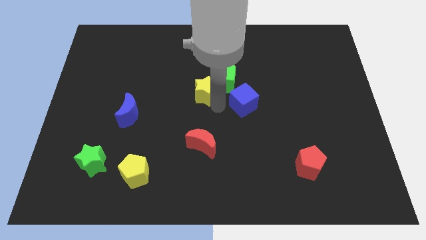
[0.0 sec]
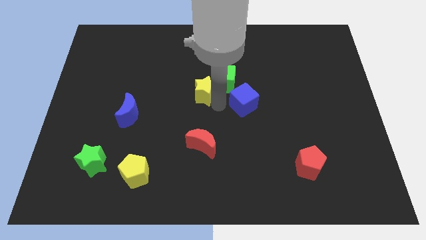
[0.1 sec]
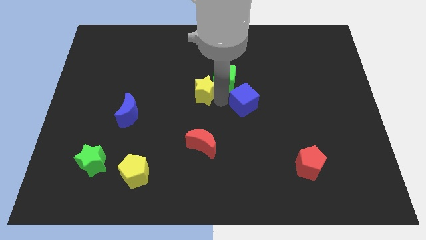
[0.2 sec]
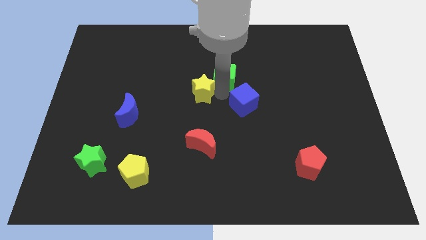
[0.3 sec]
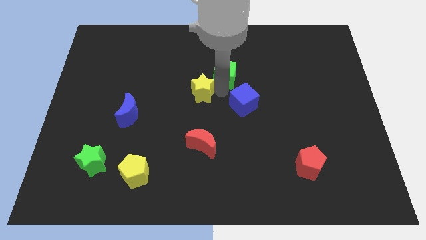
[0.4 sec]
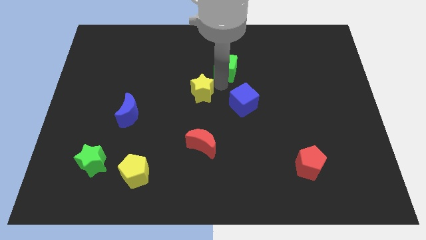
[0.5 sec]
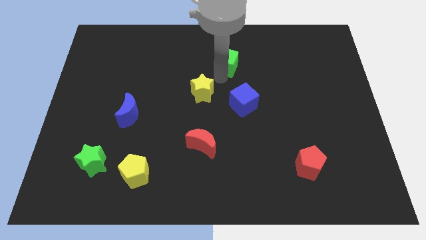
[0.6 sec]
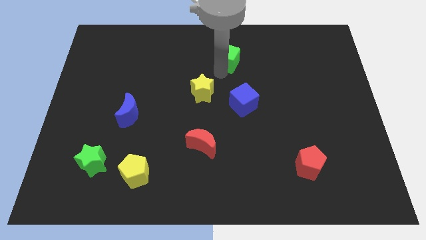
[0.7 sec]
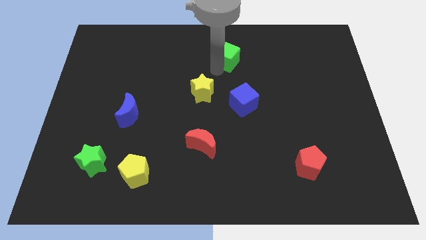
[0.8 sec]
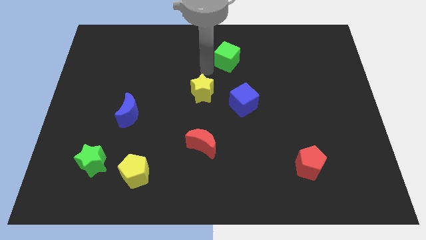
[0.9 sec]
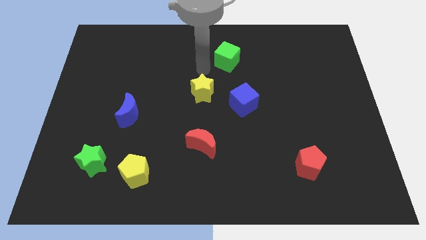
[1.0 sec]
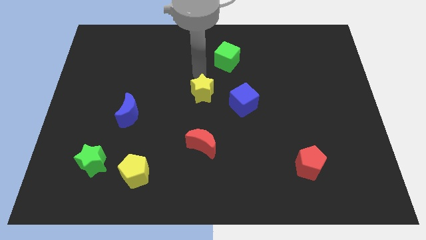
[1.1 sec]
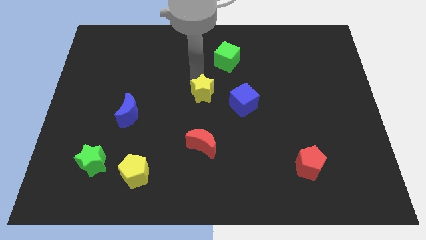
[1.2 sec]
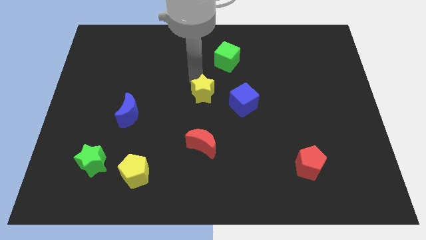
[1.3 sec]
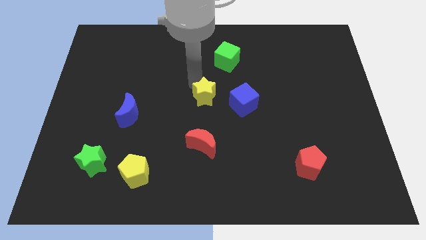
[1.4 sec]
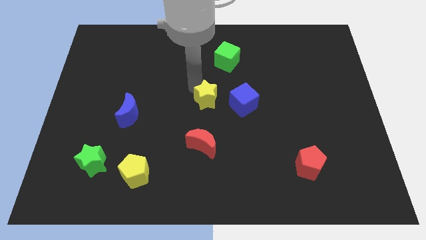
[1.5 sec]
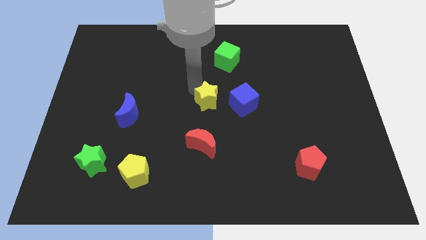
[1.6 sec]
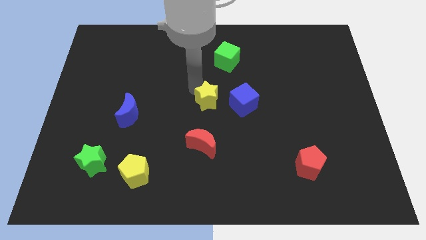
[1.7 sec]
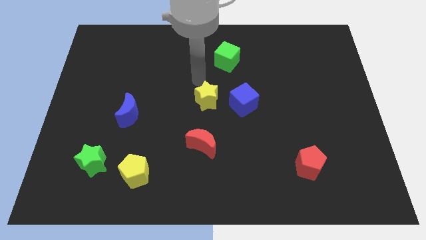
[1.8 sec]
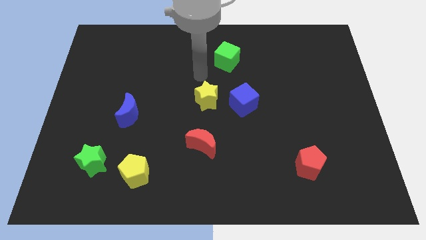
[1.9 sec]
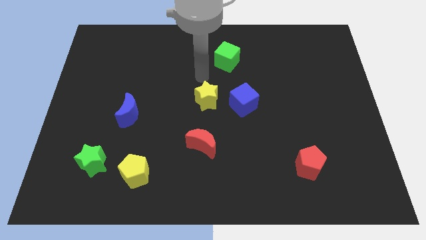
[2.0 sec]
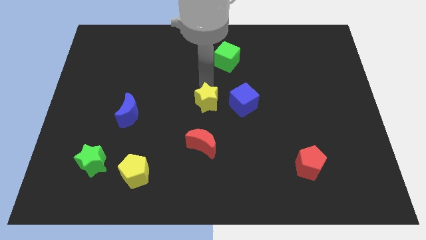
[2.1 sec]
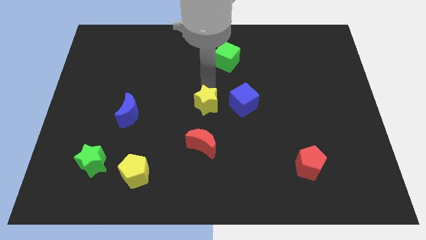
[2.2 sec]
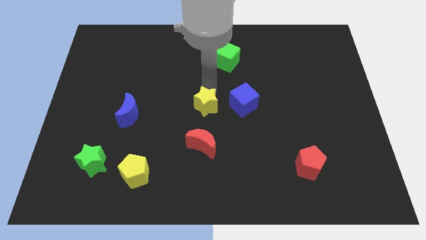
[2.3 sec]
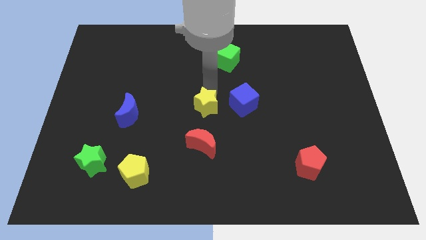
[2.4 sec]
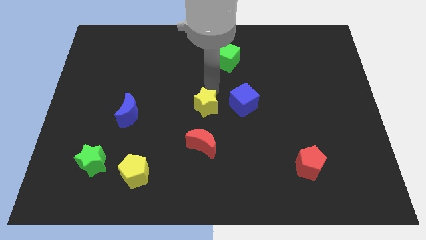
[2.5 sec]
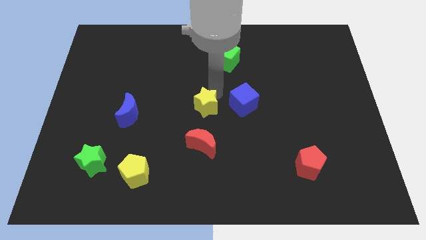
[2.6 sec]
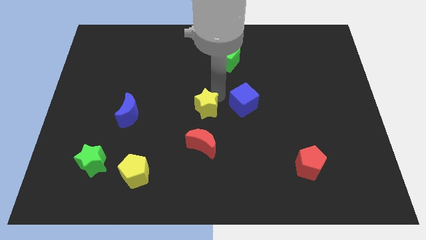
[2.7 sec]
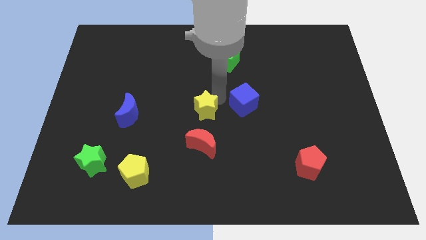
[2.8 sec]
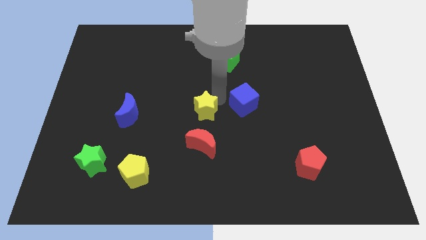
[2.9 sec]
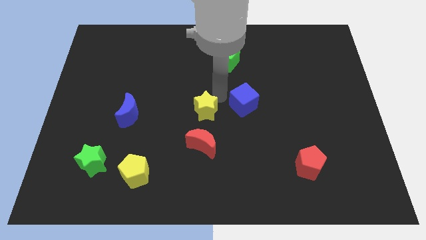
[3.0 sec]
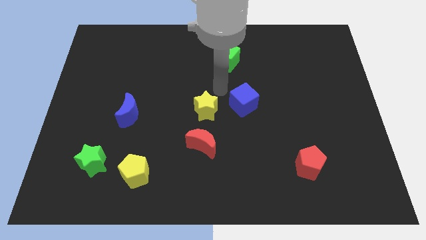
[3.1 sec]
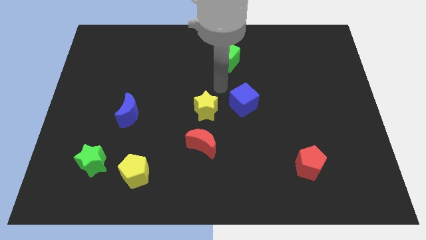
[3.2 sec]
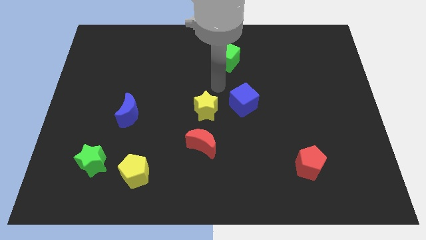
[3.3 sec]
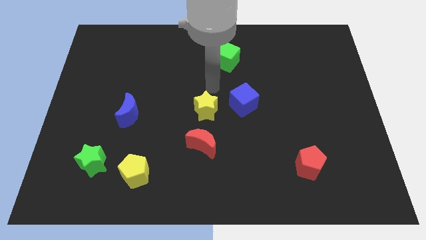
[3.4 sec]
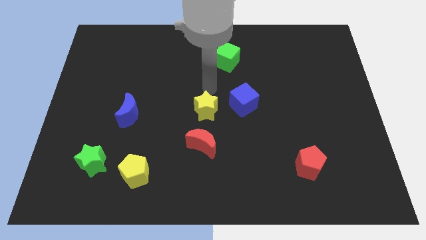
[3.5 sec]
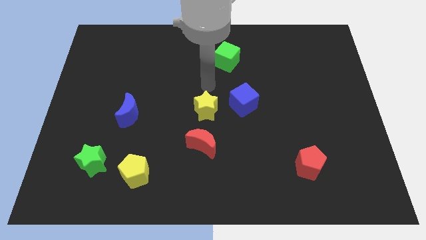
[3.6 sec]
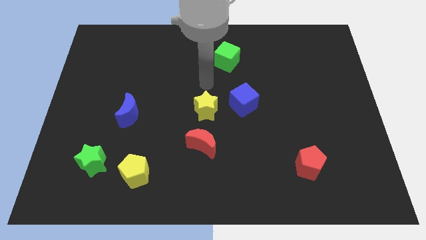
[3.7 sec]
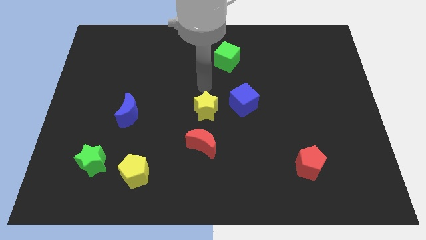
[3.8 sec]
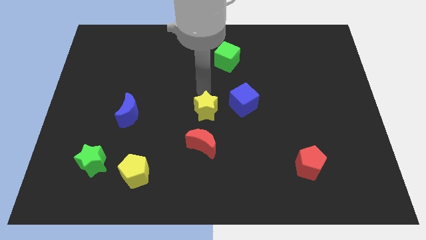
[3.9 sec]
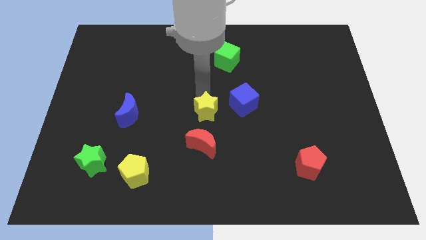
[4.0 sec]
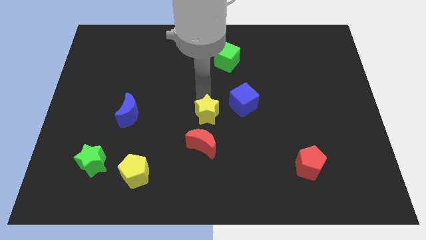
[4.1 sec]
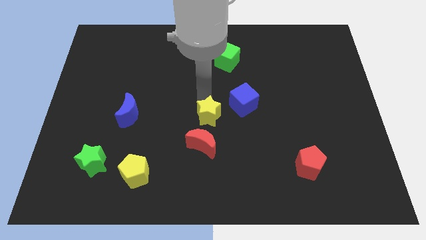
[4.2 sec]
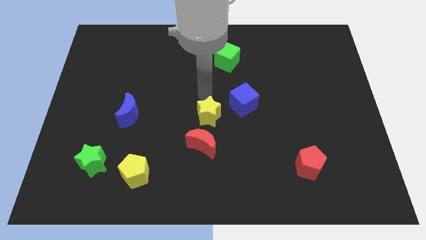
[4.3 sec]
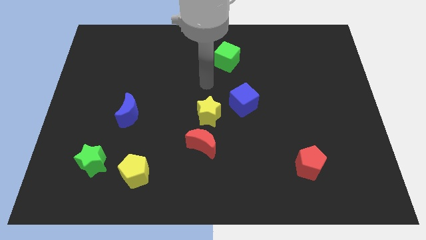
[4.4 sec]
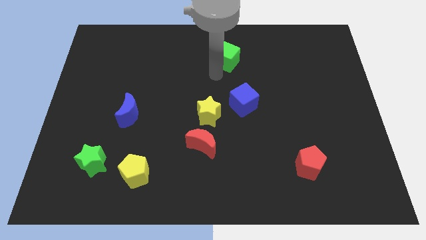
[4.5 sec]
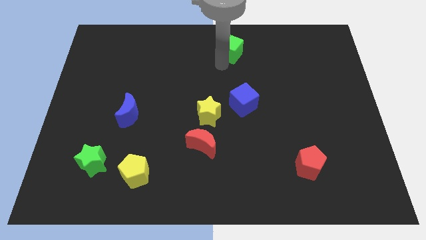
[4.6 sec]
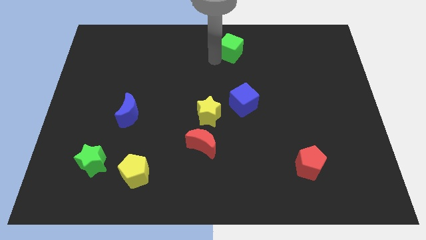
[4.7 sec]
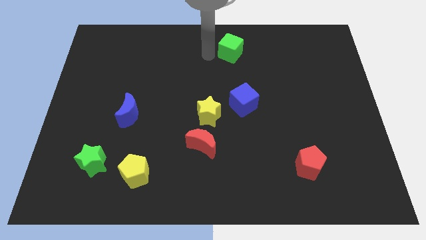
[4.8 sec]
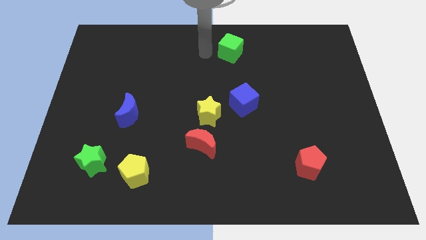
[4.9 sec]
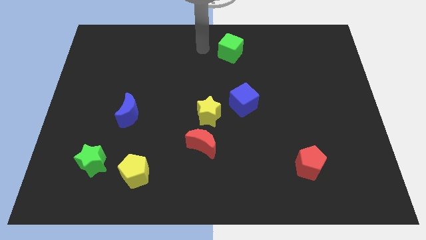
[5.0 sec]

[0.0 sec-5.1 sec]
push yellow star towards red crescent

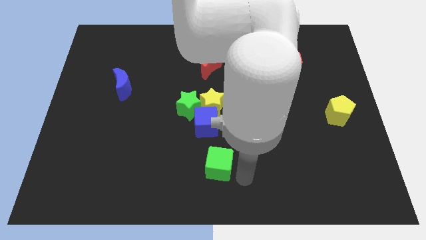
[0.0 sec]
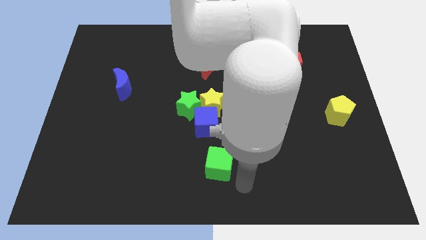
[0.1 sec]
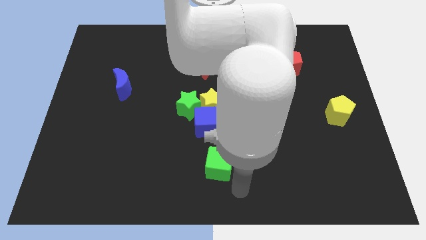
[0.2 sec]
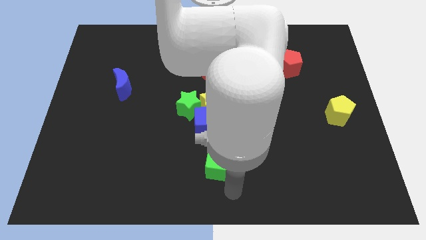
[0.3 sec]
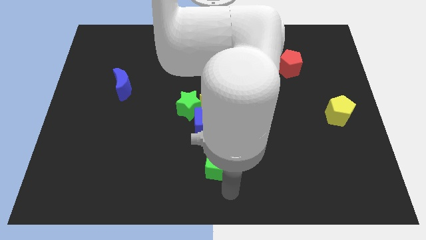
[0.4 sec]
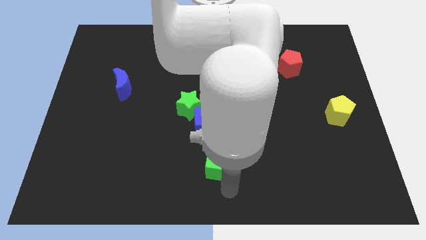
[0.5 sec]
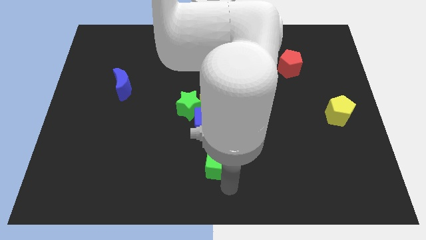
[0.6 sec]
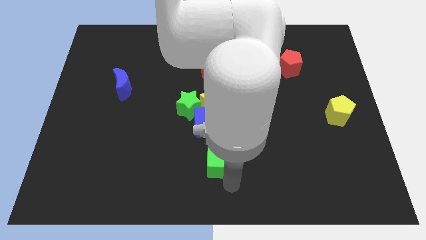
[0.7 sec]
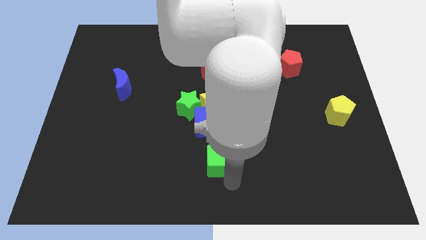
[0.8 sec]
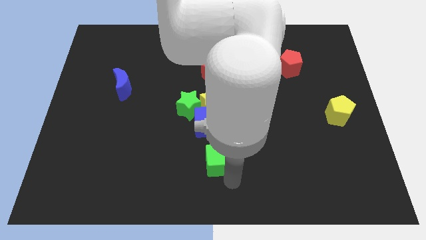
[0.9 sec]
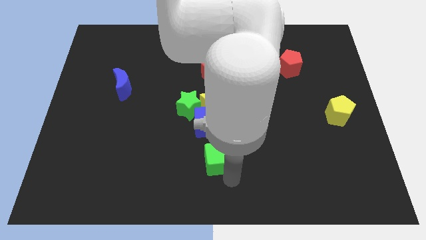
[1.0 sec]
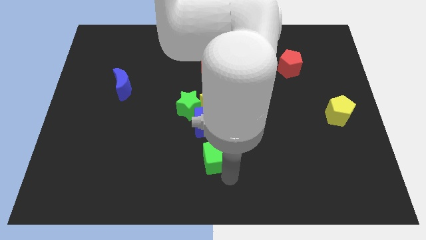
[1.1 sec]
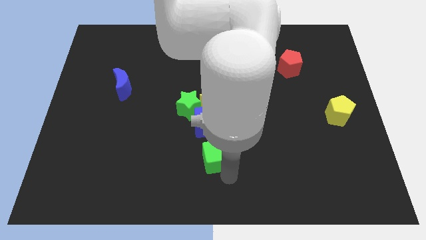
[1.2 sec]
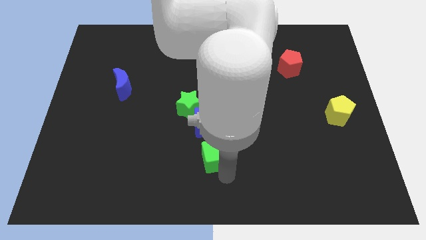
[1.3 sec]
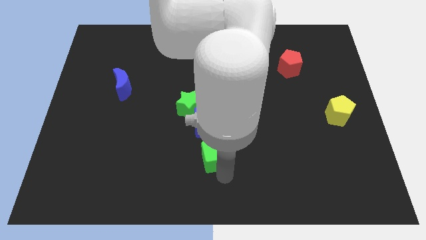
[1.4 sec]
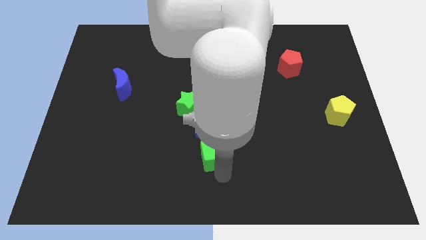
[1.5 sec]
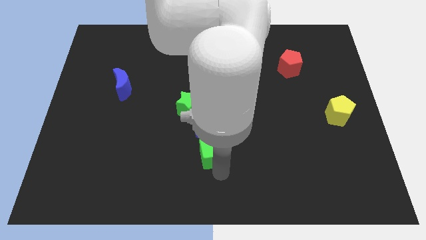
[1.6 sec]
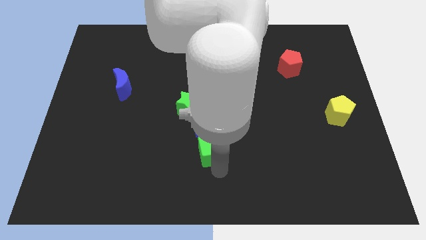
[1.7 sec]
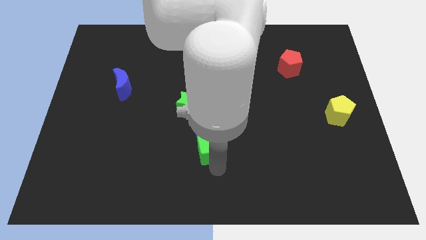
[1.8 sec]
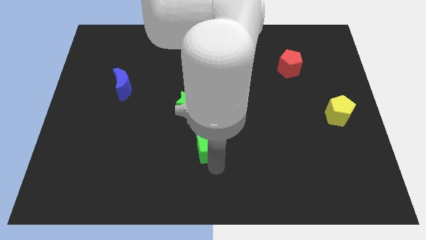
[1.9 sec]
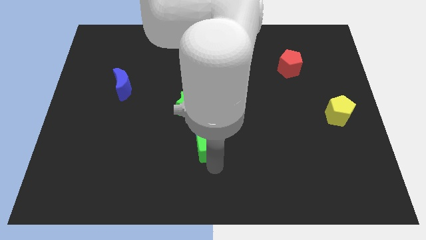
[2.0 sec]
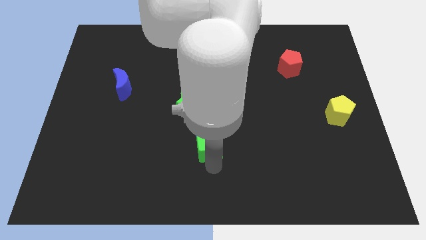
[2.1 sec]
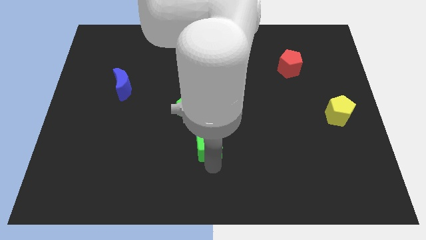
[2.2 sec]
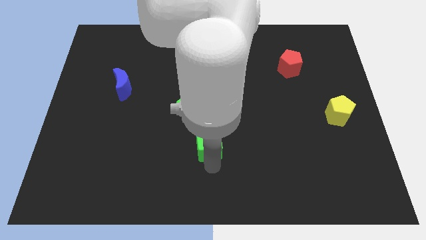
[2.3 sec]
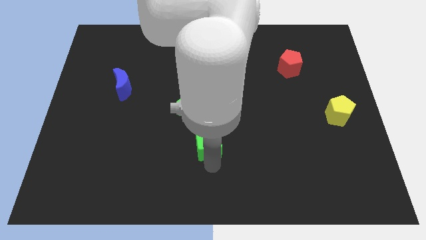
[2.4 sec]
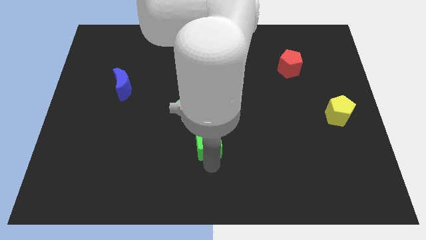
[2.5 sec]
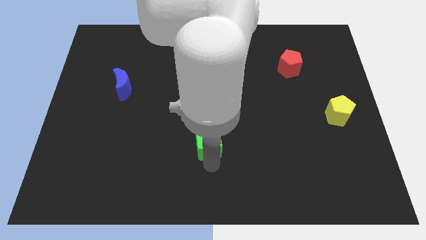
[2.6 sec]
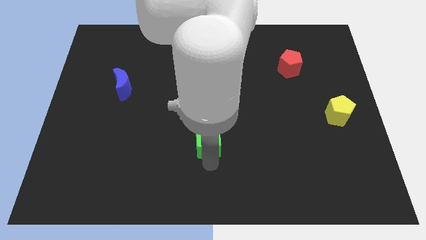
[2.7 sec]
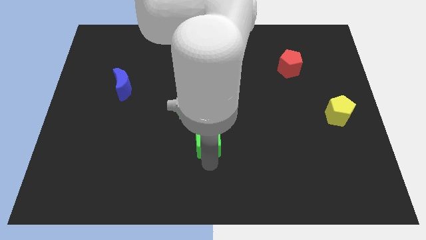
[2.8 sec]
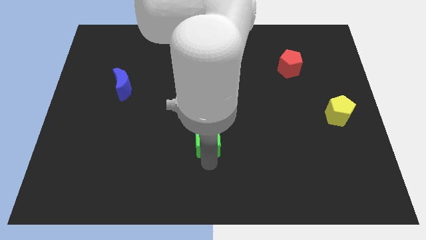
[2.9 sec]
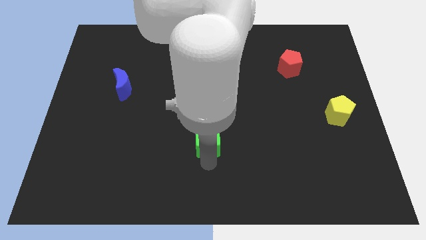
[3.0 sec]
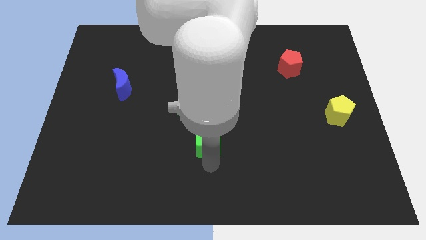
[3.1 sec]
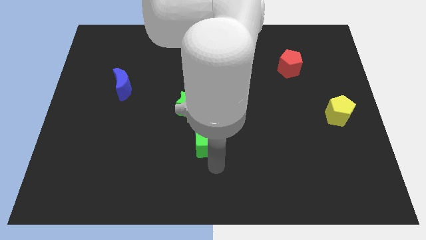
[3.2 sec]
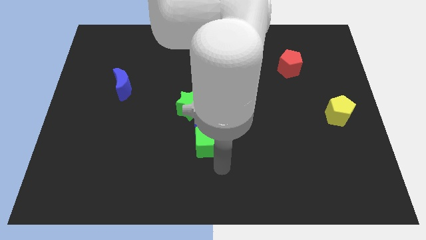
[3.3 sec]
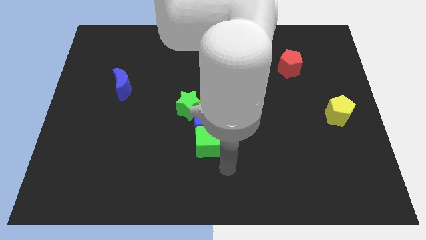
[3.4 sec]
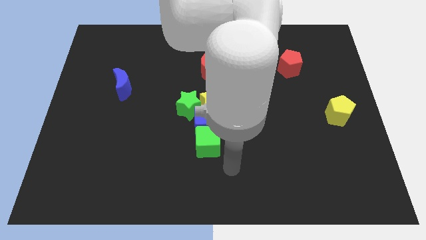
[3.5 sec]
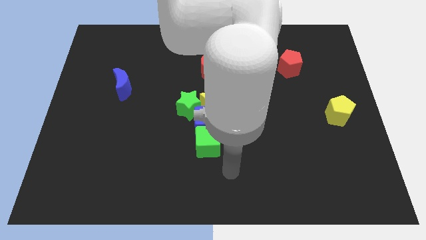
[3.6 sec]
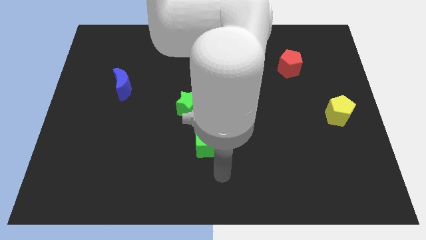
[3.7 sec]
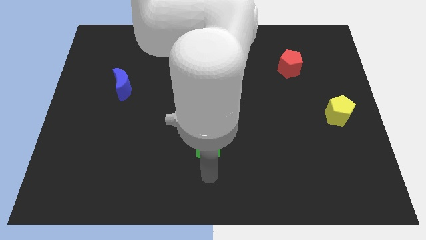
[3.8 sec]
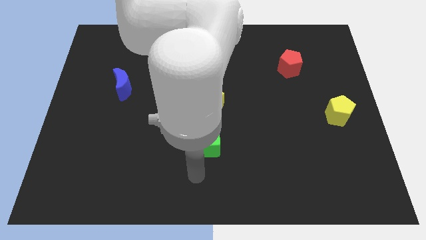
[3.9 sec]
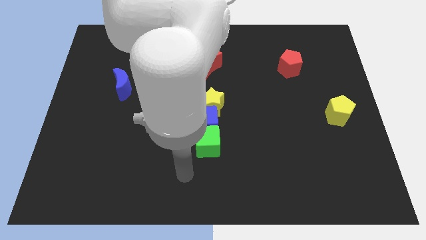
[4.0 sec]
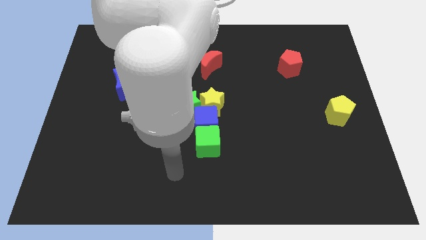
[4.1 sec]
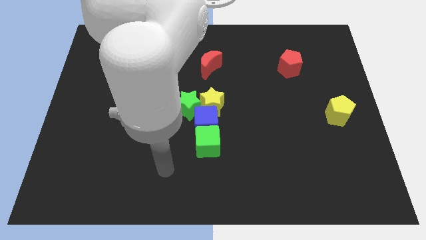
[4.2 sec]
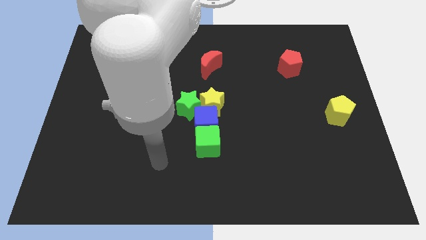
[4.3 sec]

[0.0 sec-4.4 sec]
put the green cube to the bottom side of the blue cube
